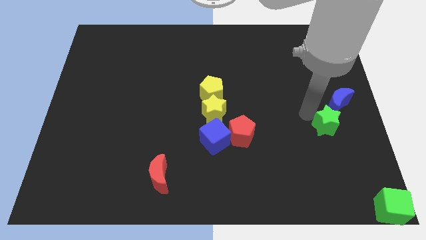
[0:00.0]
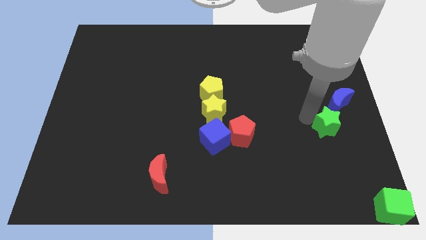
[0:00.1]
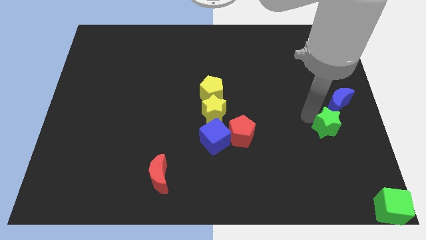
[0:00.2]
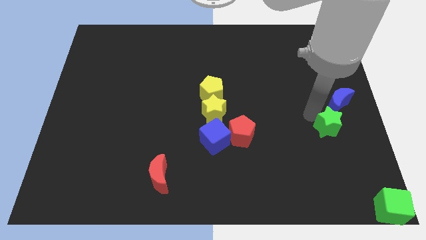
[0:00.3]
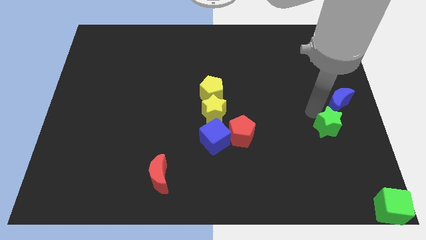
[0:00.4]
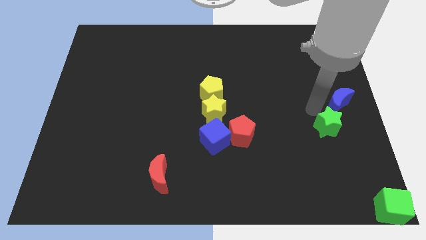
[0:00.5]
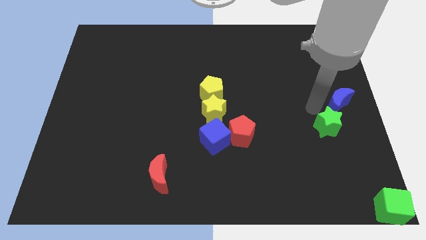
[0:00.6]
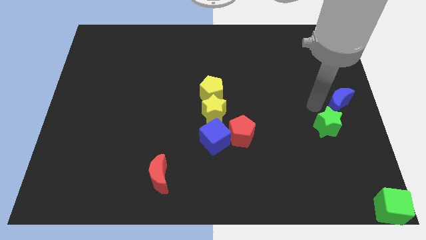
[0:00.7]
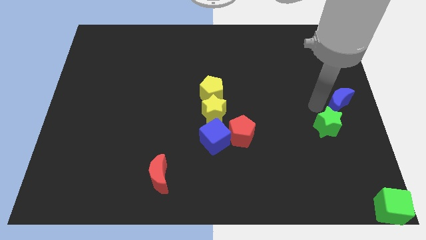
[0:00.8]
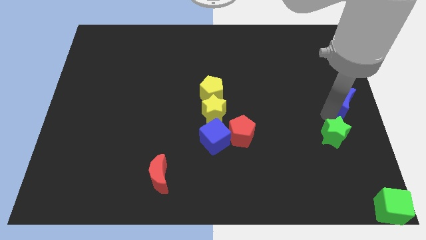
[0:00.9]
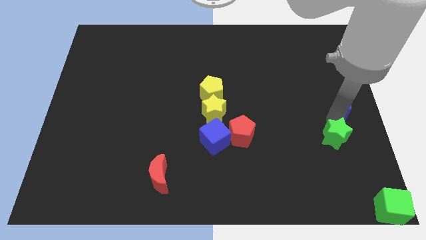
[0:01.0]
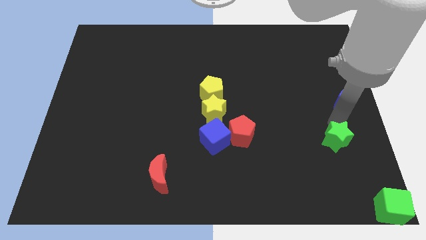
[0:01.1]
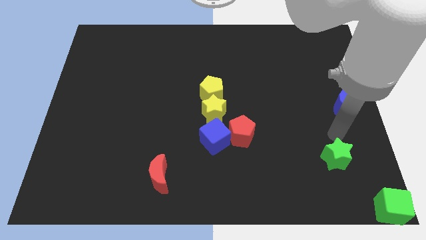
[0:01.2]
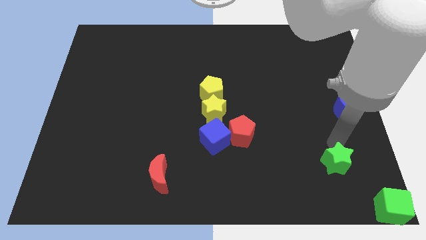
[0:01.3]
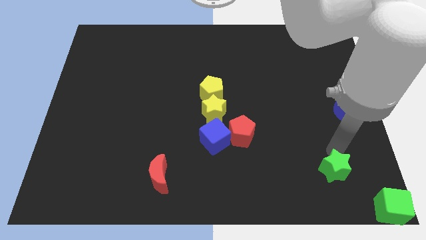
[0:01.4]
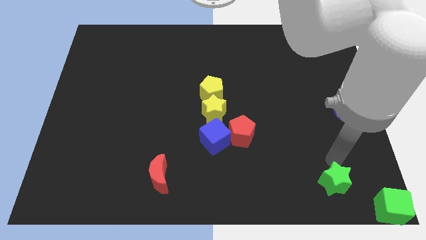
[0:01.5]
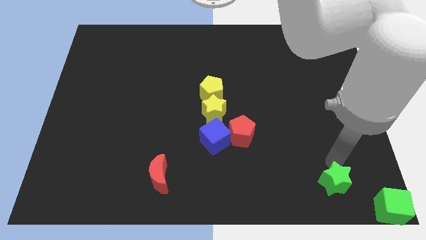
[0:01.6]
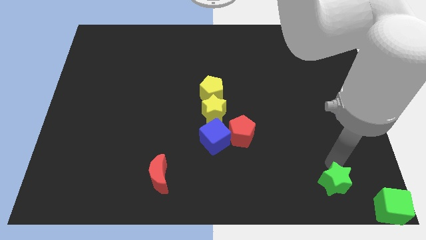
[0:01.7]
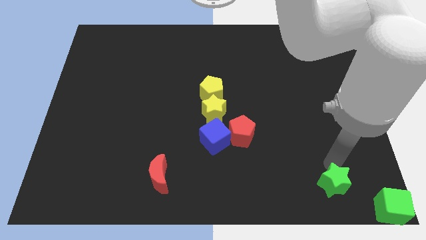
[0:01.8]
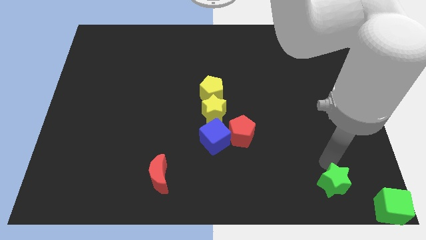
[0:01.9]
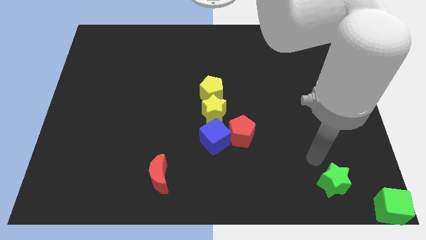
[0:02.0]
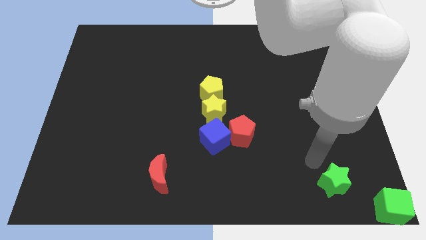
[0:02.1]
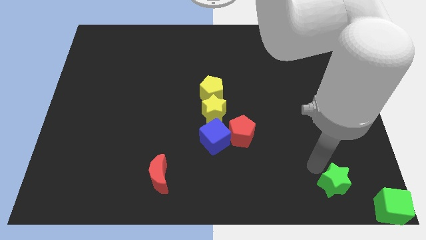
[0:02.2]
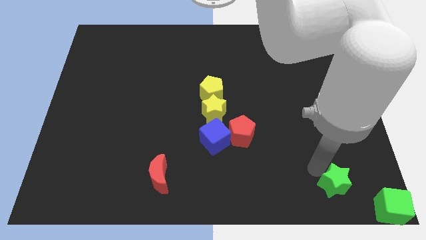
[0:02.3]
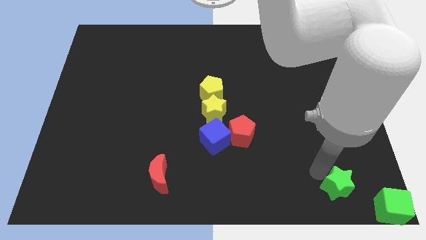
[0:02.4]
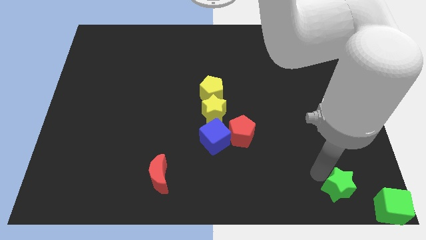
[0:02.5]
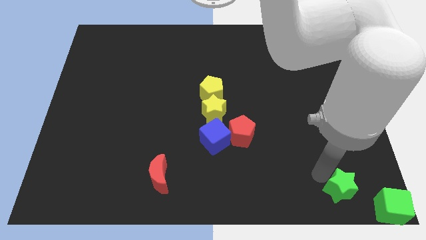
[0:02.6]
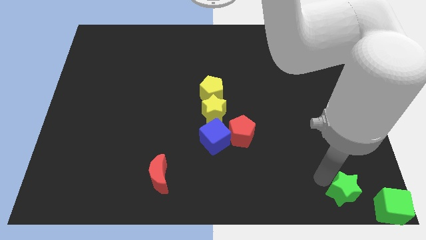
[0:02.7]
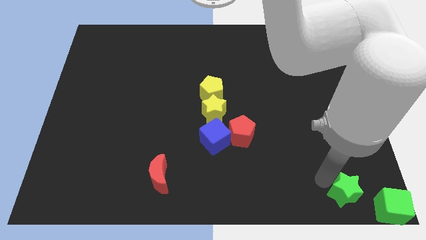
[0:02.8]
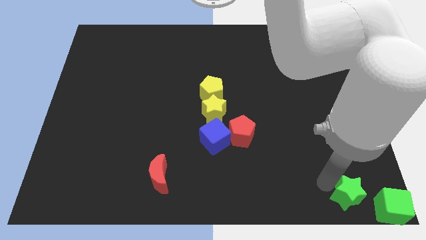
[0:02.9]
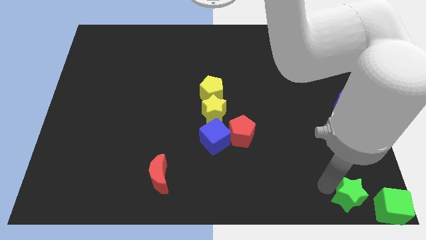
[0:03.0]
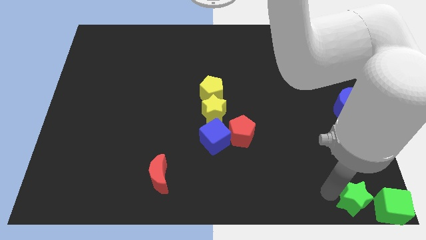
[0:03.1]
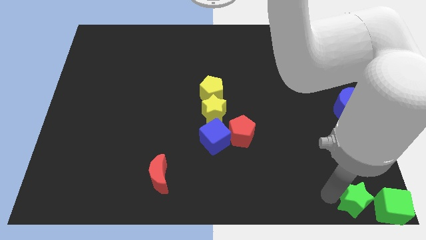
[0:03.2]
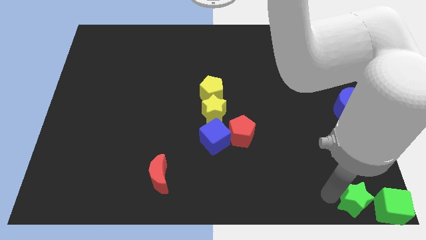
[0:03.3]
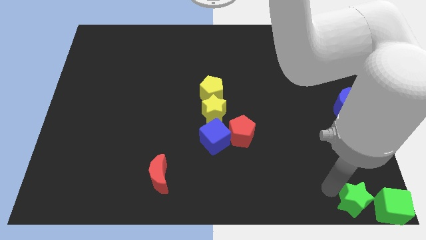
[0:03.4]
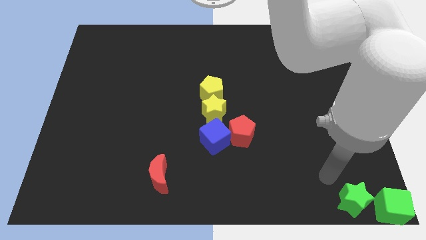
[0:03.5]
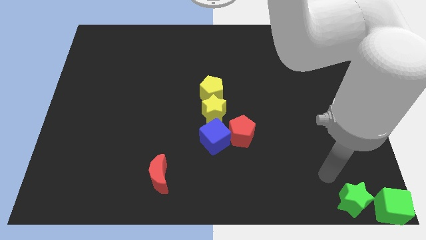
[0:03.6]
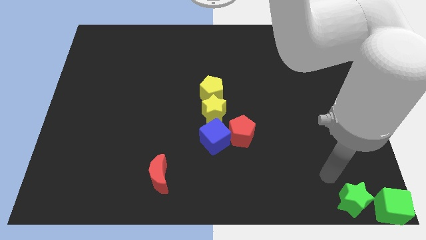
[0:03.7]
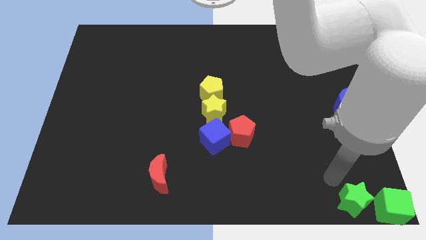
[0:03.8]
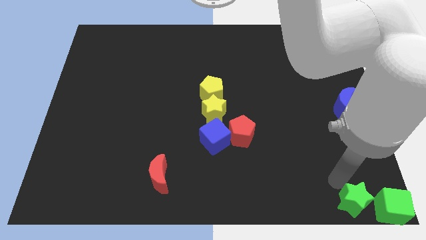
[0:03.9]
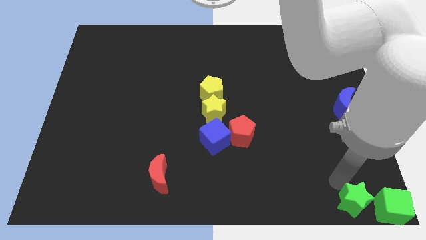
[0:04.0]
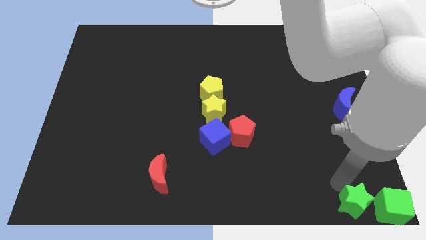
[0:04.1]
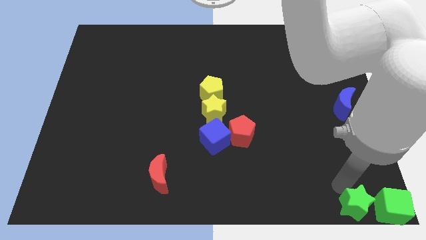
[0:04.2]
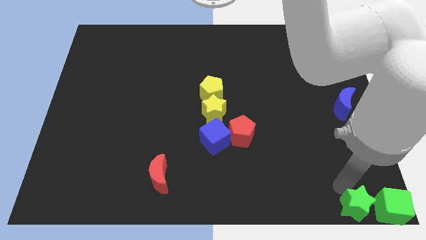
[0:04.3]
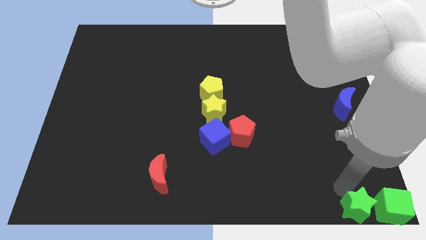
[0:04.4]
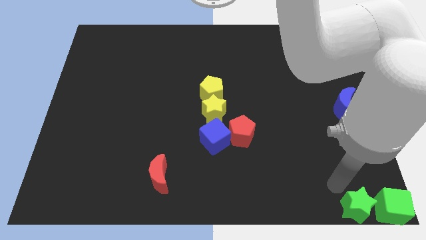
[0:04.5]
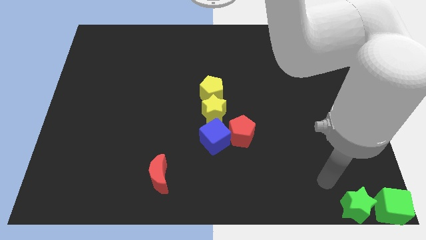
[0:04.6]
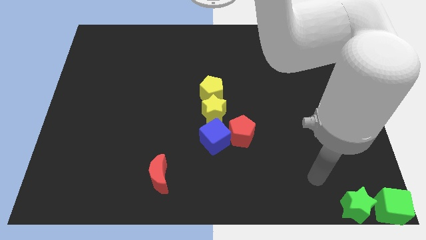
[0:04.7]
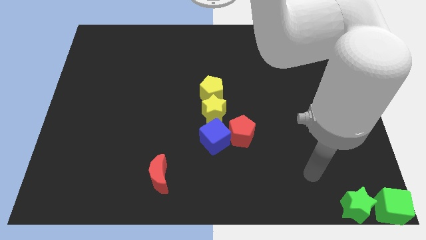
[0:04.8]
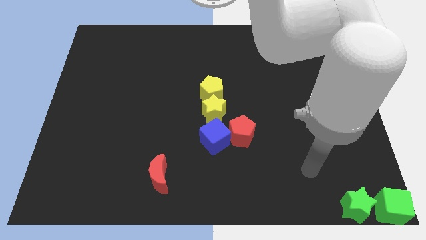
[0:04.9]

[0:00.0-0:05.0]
move the green star towards the green cube

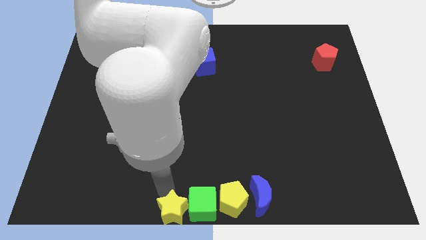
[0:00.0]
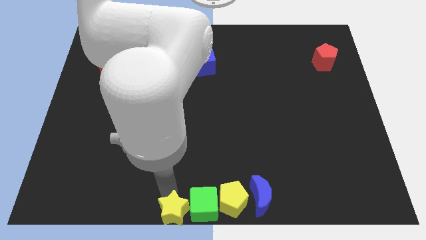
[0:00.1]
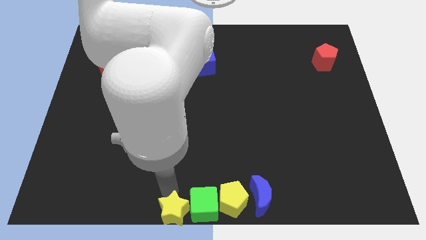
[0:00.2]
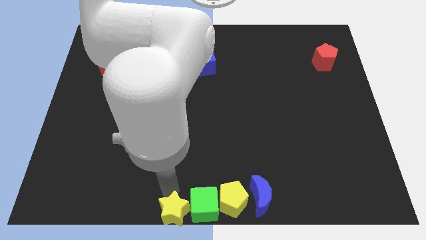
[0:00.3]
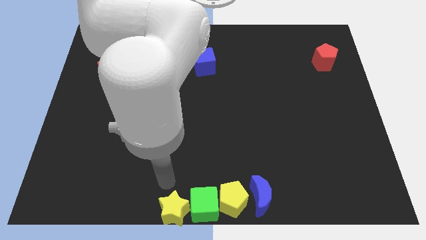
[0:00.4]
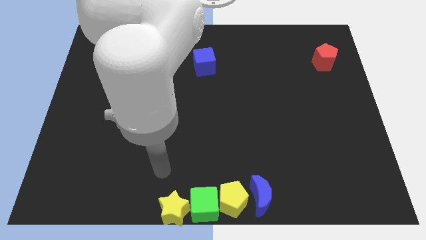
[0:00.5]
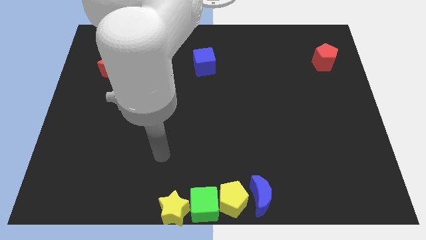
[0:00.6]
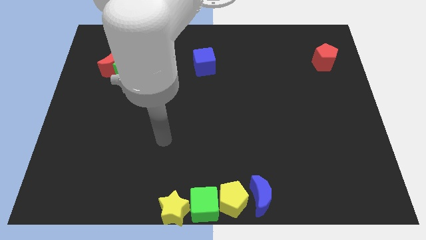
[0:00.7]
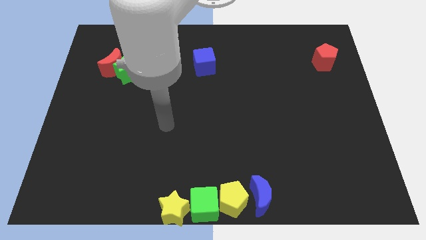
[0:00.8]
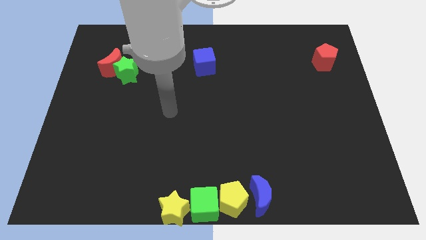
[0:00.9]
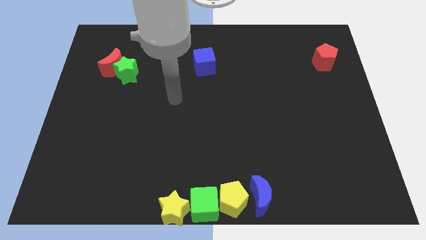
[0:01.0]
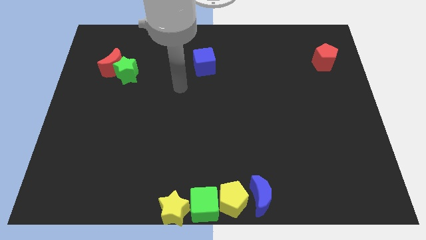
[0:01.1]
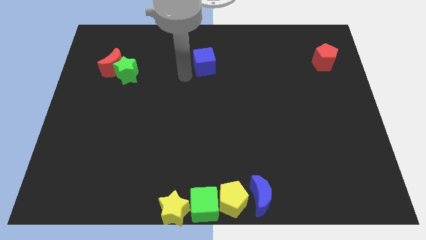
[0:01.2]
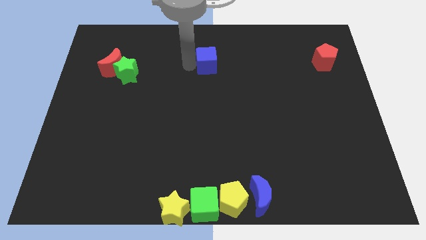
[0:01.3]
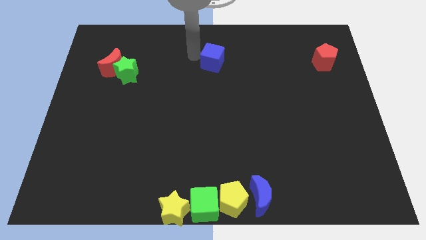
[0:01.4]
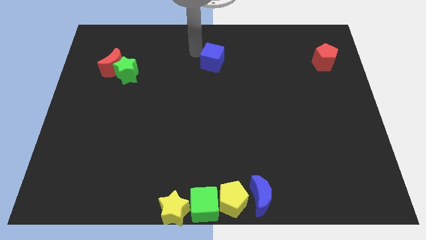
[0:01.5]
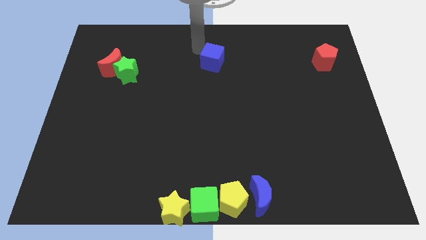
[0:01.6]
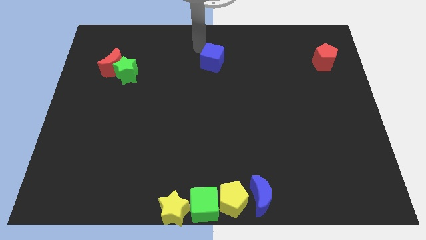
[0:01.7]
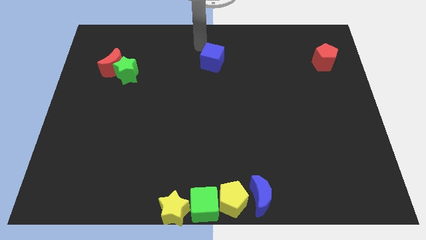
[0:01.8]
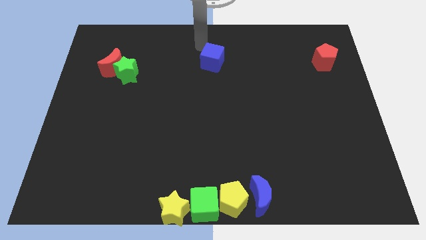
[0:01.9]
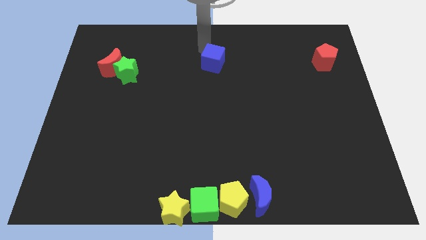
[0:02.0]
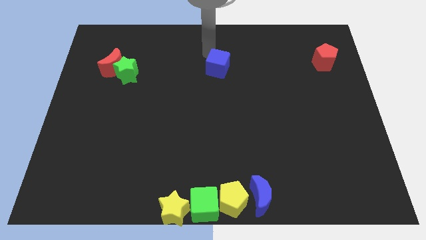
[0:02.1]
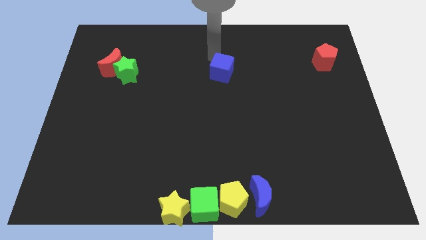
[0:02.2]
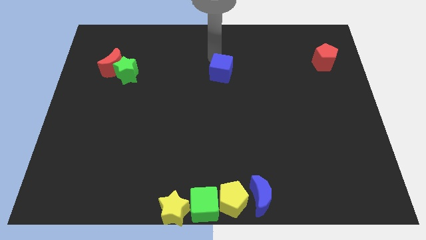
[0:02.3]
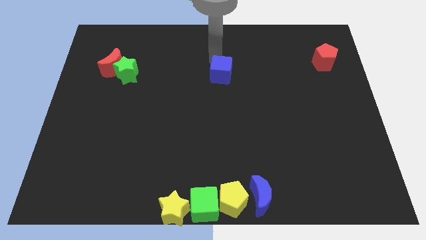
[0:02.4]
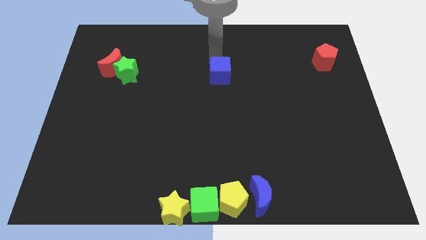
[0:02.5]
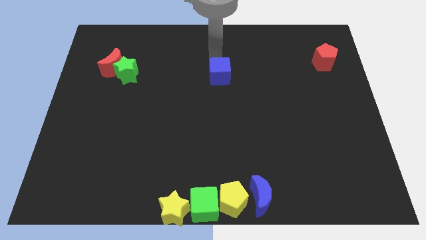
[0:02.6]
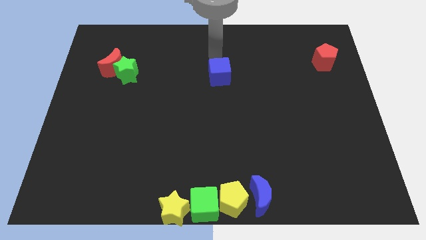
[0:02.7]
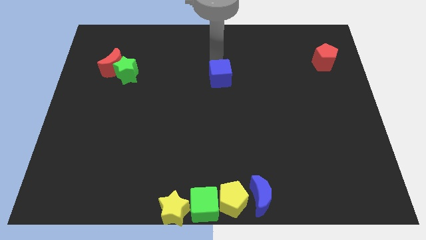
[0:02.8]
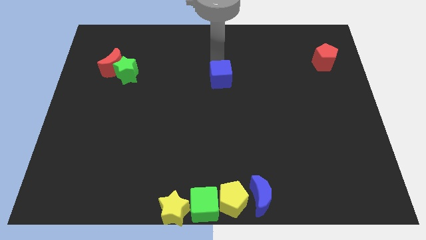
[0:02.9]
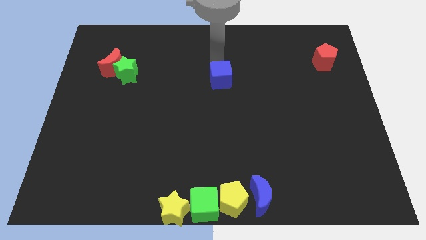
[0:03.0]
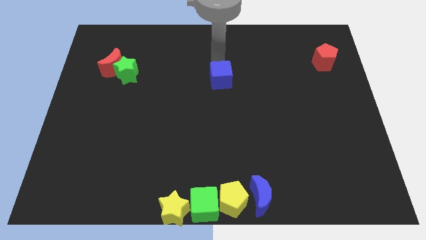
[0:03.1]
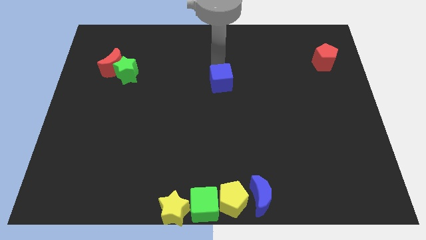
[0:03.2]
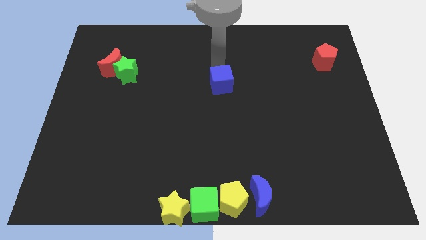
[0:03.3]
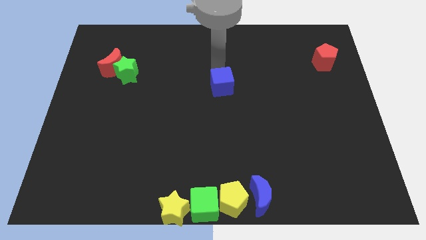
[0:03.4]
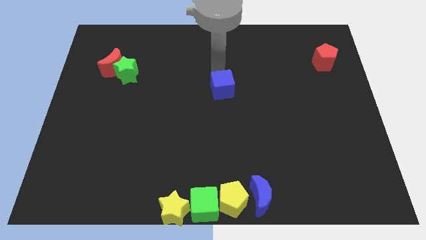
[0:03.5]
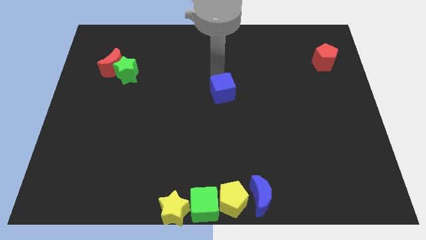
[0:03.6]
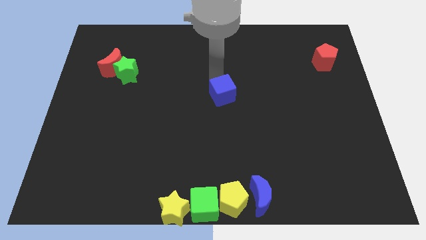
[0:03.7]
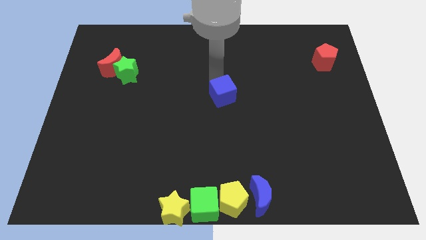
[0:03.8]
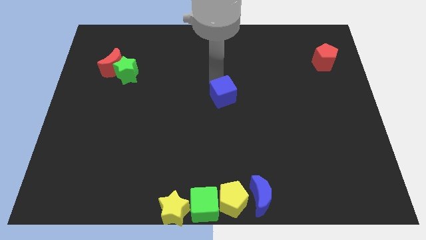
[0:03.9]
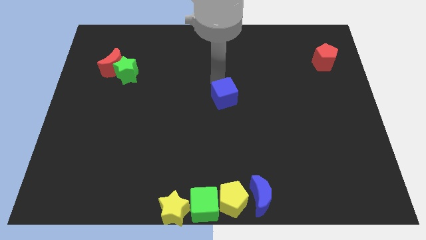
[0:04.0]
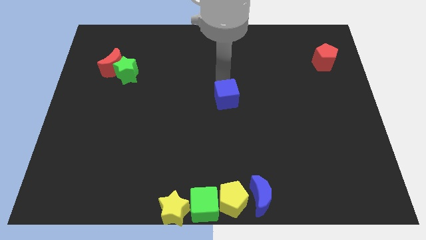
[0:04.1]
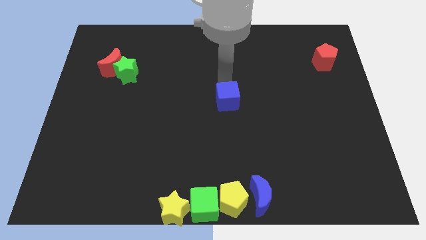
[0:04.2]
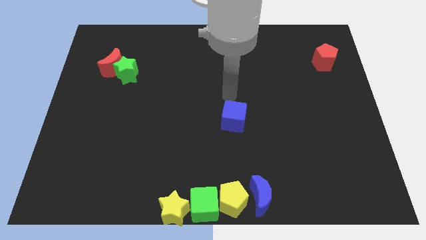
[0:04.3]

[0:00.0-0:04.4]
move blue cube to the centre of the board
